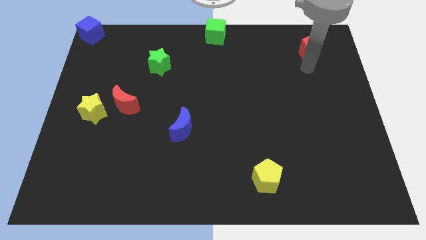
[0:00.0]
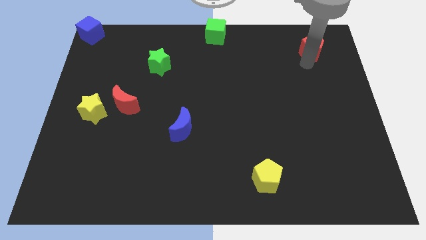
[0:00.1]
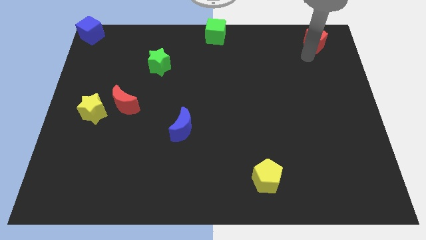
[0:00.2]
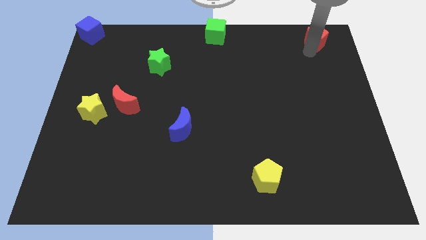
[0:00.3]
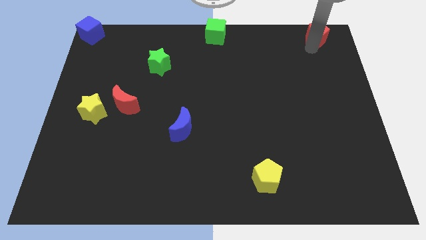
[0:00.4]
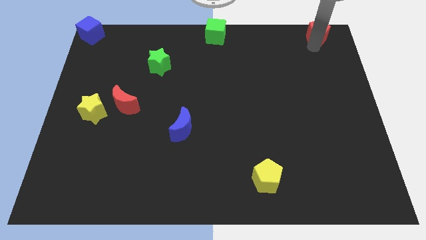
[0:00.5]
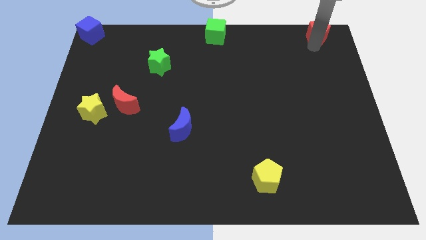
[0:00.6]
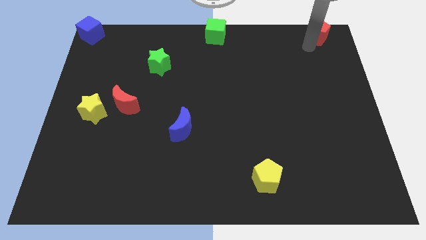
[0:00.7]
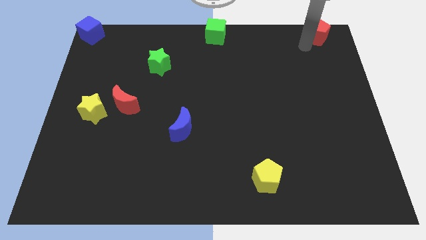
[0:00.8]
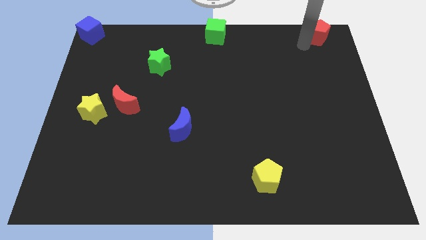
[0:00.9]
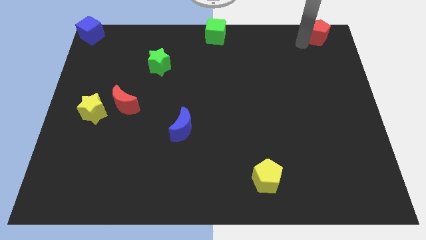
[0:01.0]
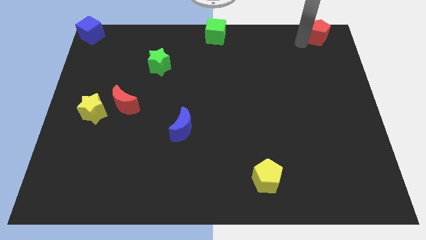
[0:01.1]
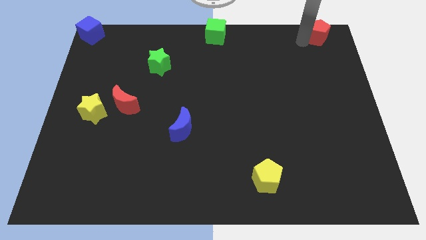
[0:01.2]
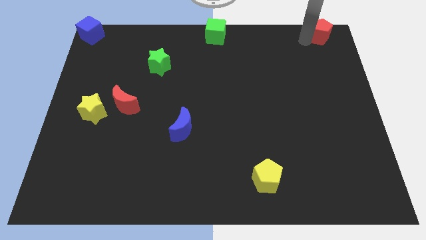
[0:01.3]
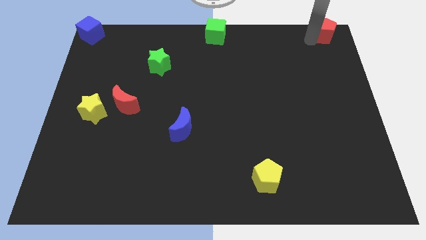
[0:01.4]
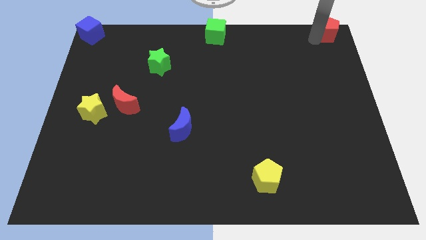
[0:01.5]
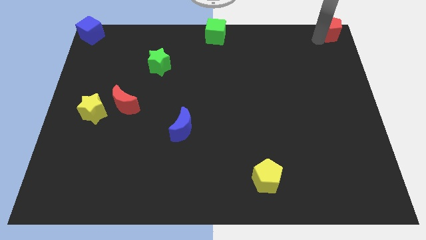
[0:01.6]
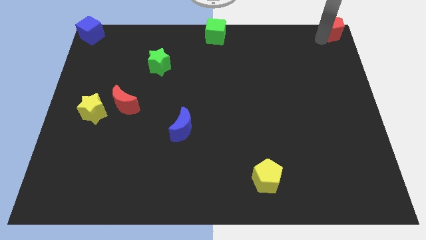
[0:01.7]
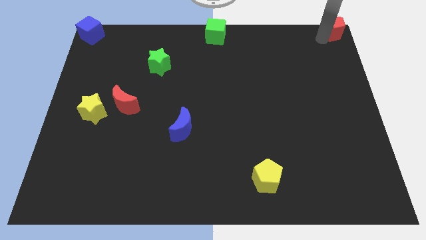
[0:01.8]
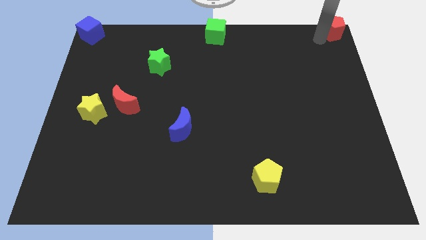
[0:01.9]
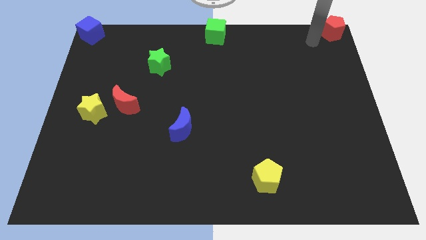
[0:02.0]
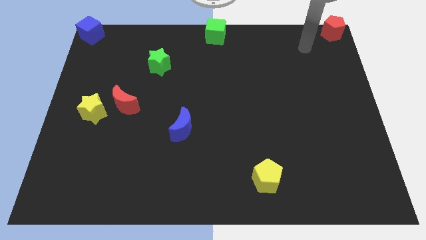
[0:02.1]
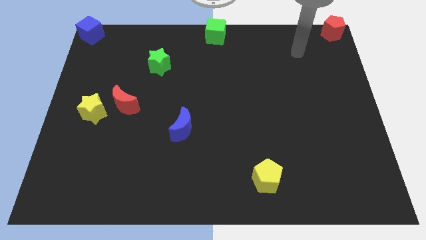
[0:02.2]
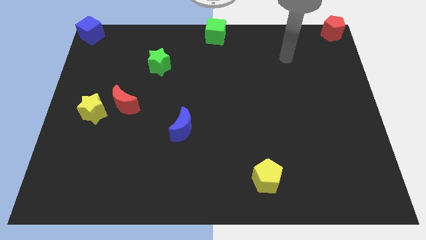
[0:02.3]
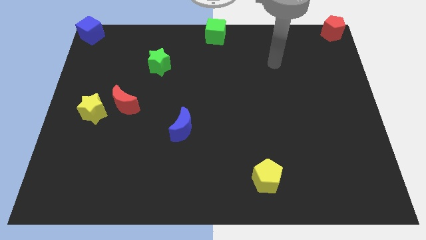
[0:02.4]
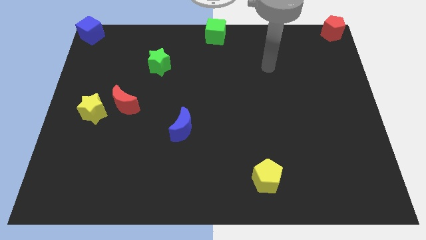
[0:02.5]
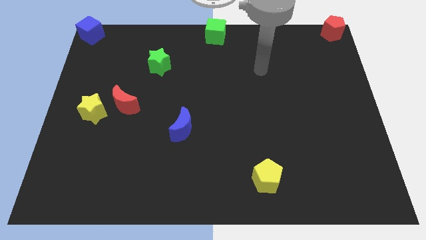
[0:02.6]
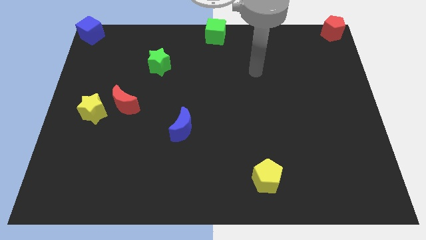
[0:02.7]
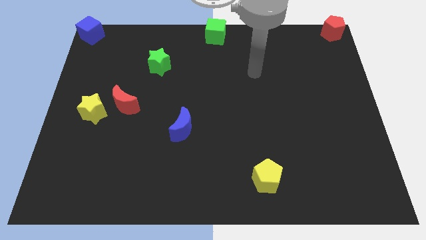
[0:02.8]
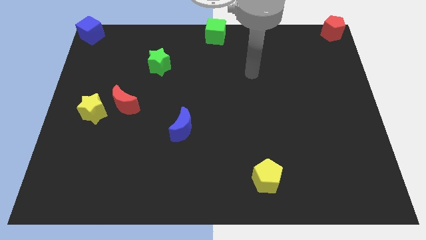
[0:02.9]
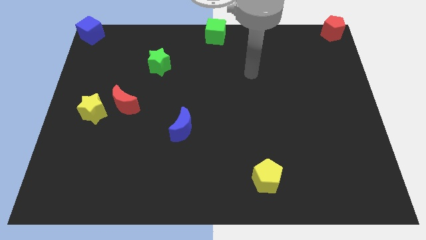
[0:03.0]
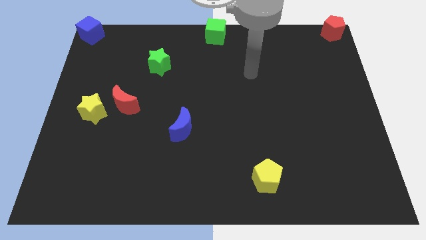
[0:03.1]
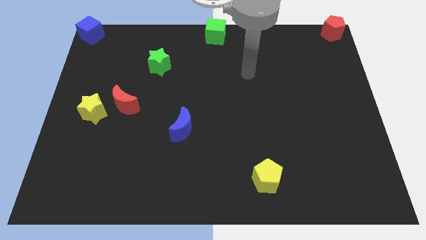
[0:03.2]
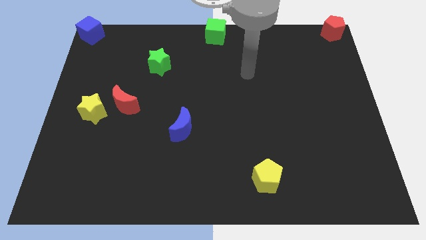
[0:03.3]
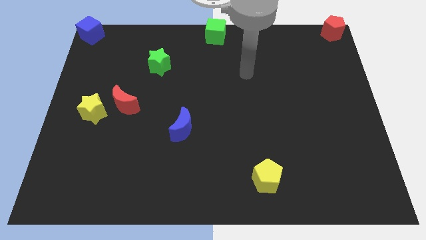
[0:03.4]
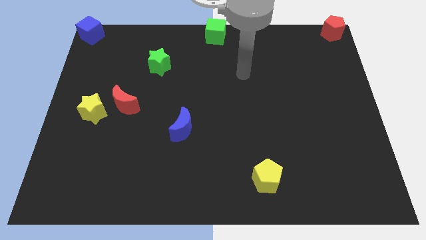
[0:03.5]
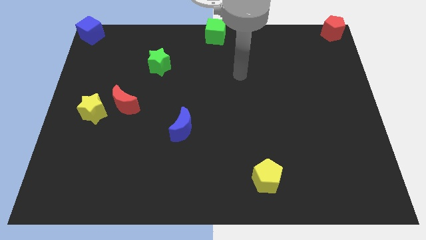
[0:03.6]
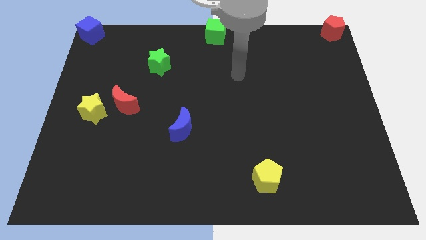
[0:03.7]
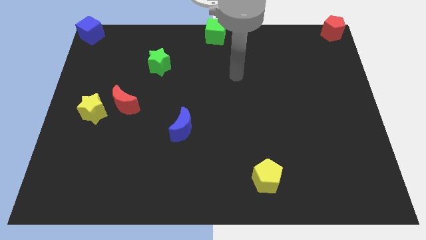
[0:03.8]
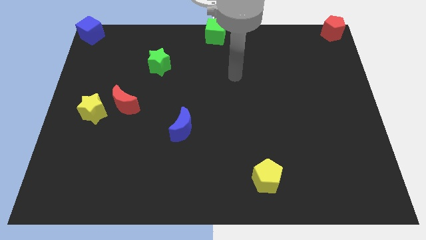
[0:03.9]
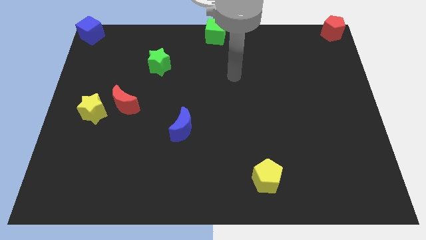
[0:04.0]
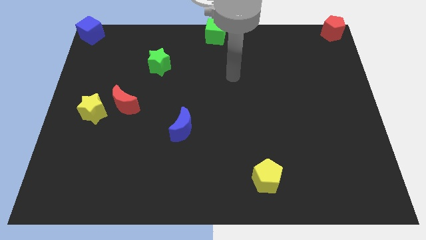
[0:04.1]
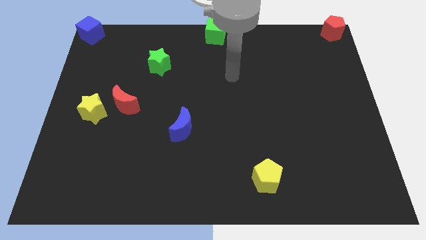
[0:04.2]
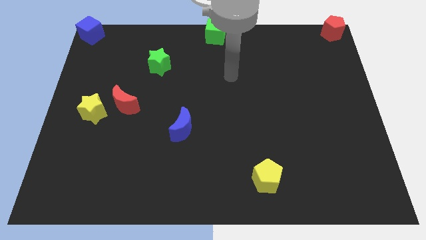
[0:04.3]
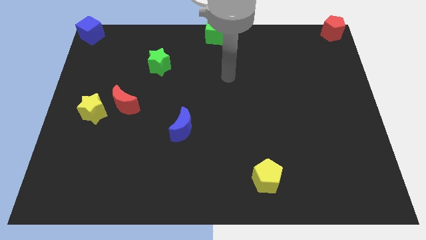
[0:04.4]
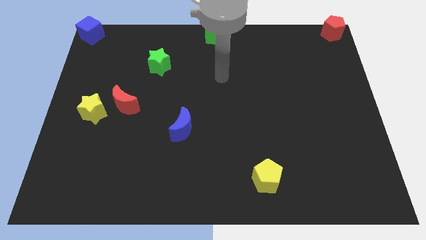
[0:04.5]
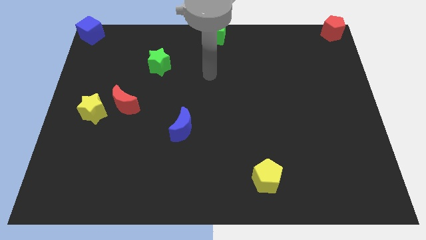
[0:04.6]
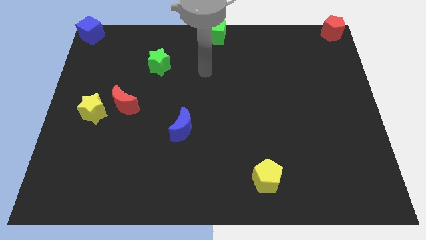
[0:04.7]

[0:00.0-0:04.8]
push the red pentagon to the top right corner

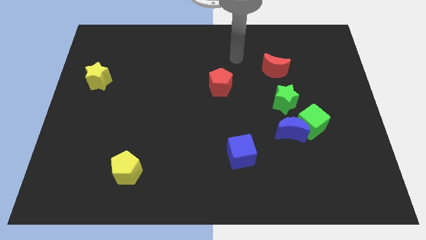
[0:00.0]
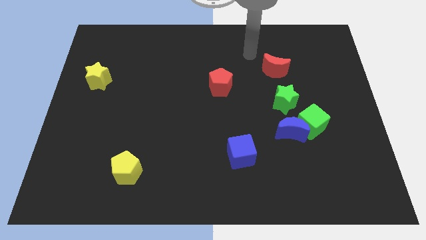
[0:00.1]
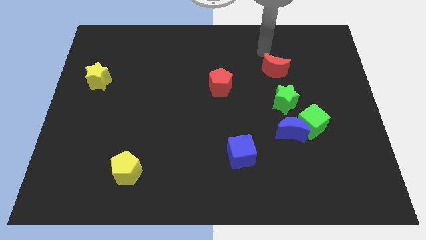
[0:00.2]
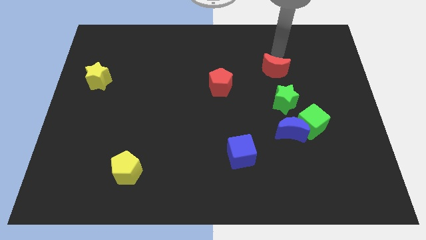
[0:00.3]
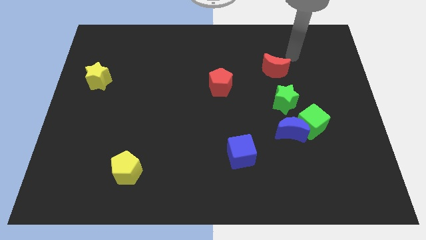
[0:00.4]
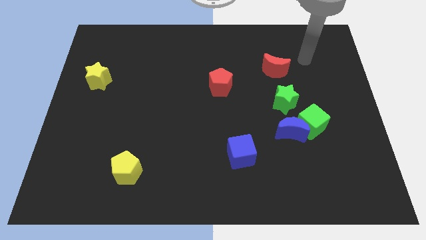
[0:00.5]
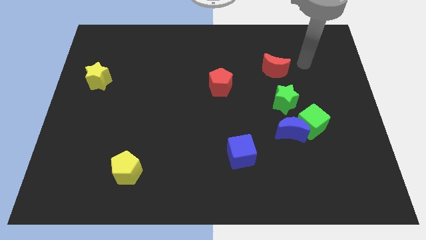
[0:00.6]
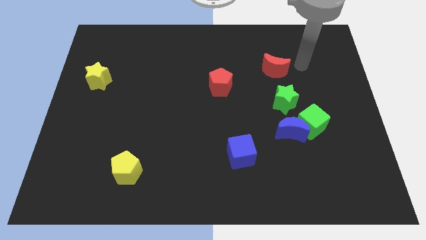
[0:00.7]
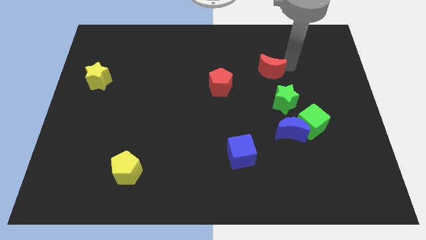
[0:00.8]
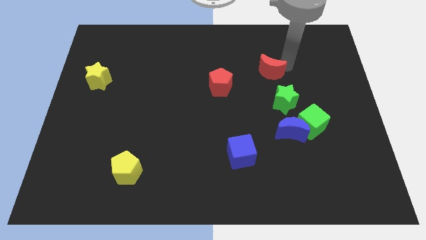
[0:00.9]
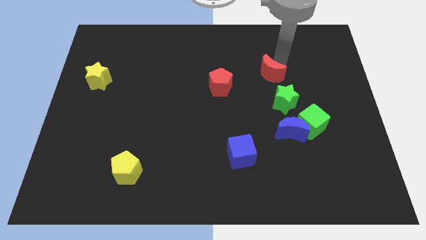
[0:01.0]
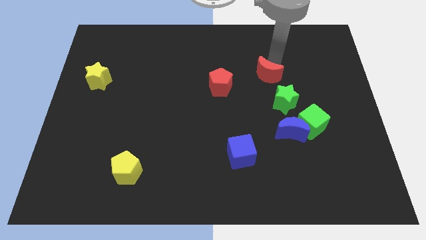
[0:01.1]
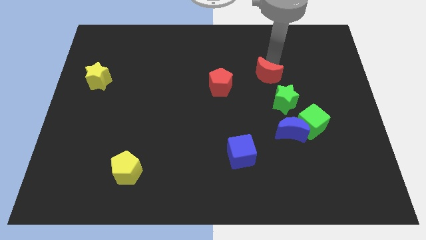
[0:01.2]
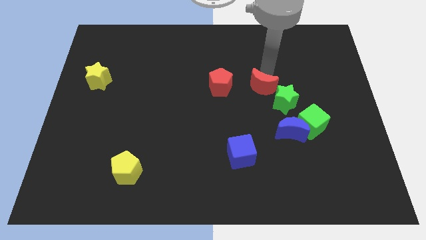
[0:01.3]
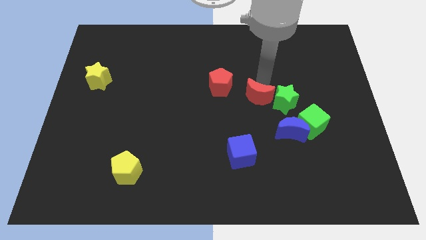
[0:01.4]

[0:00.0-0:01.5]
put the red crescent parallel right to the red pentagon

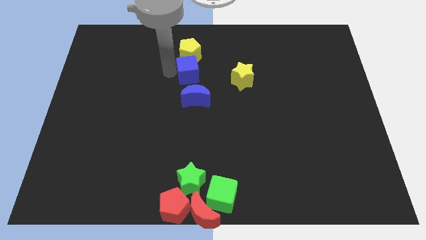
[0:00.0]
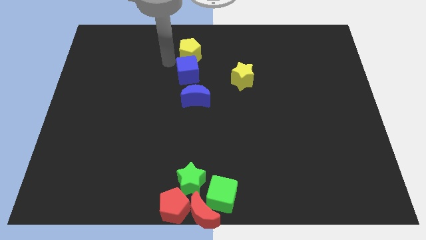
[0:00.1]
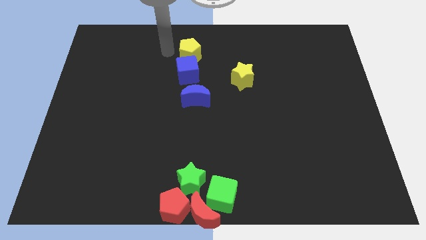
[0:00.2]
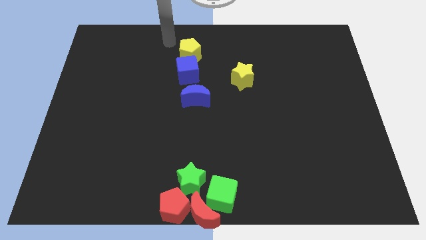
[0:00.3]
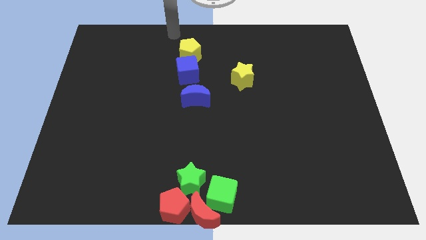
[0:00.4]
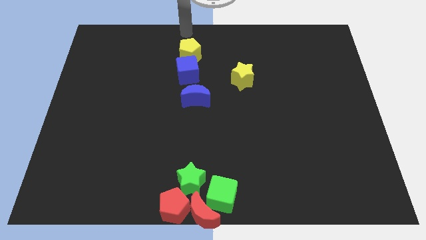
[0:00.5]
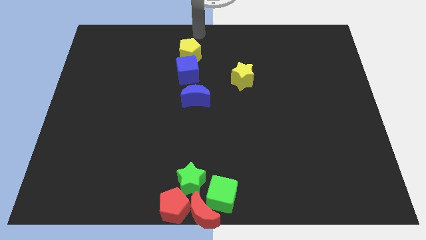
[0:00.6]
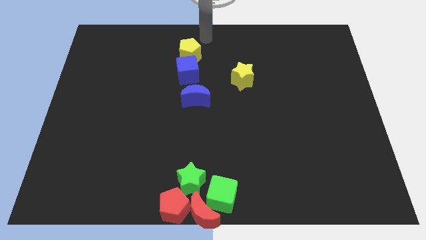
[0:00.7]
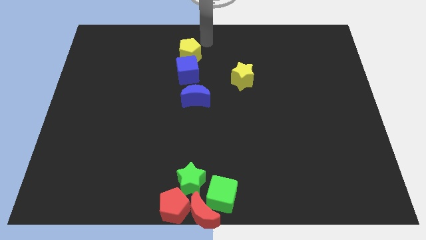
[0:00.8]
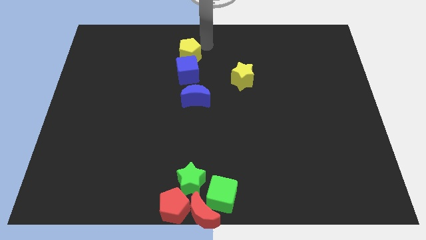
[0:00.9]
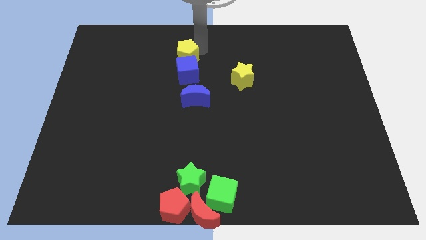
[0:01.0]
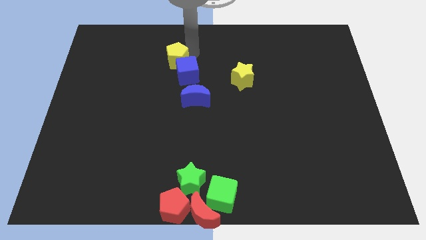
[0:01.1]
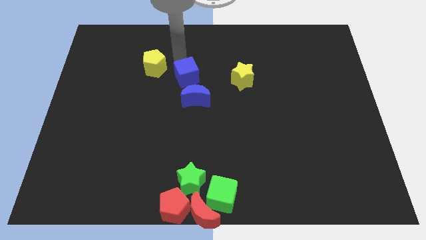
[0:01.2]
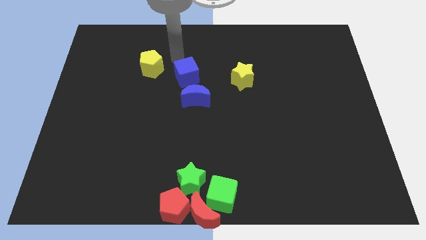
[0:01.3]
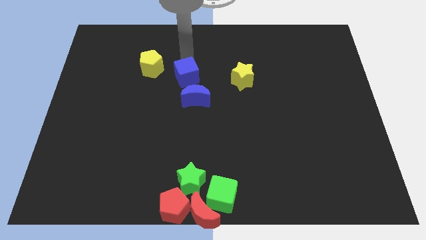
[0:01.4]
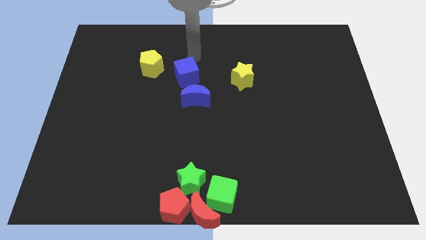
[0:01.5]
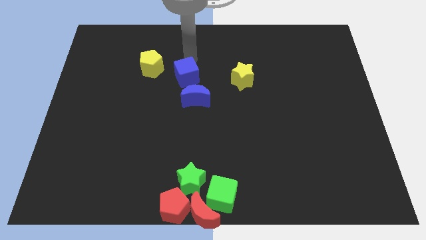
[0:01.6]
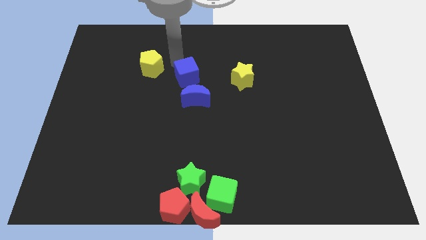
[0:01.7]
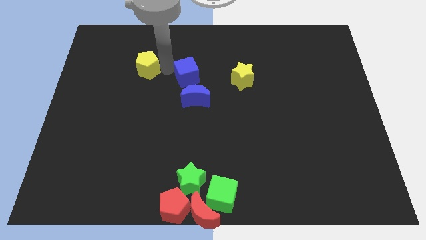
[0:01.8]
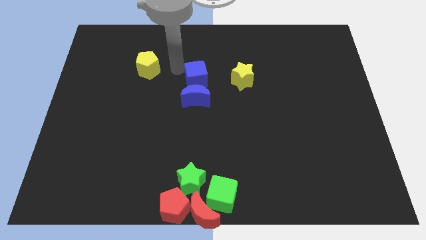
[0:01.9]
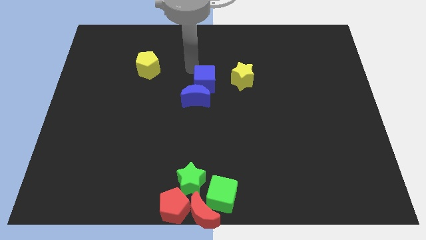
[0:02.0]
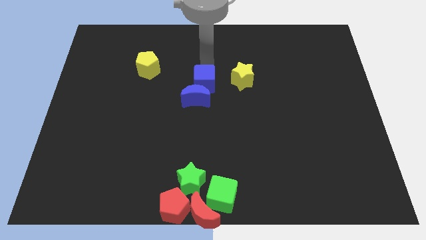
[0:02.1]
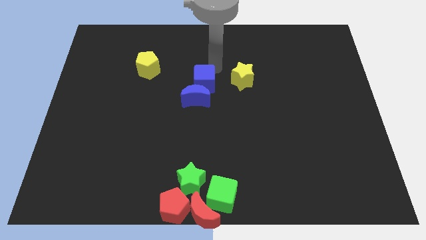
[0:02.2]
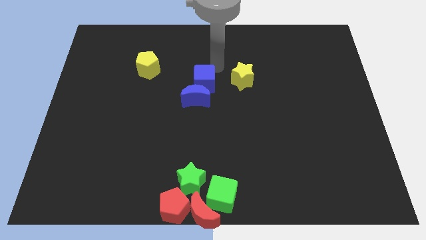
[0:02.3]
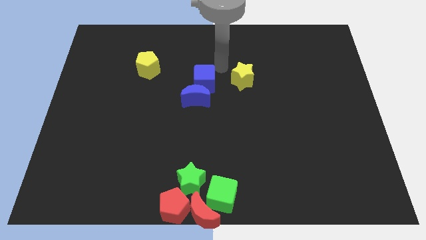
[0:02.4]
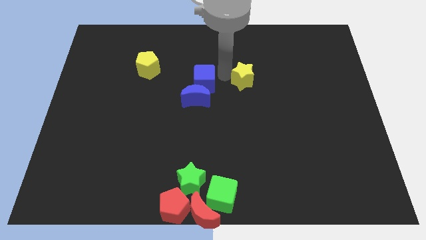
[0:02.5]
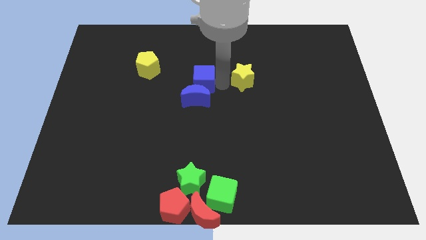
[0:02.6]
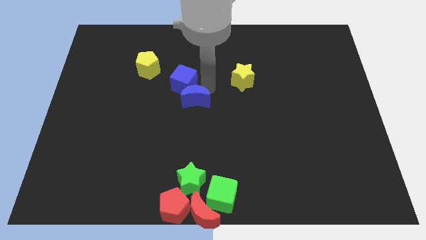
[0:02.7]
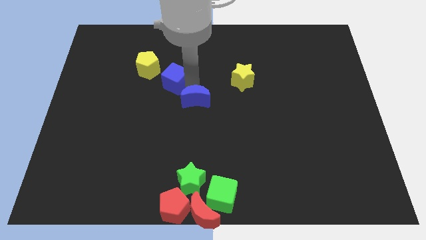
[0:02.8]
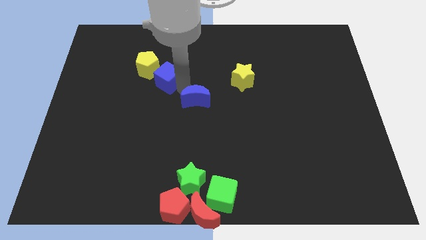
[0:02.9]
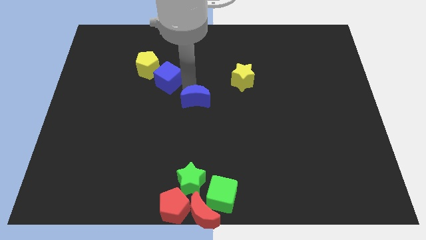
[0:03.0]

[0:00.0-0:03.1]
push the yellow pentagon and blue cube towards the left
